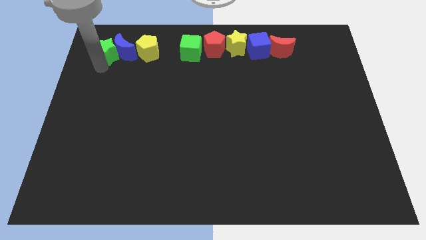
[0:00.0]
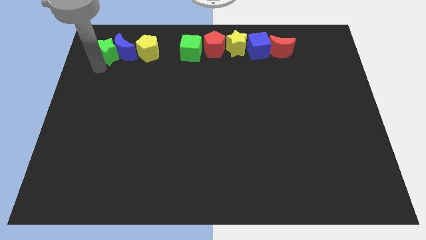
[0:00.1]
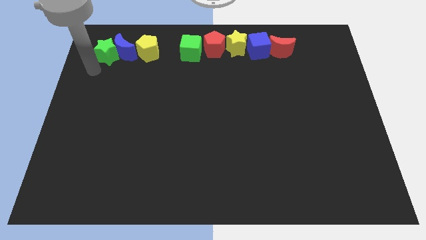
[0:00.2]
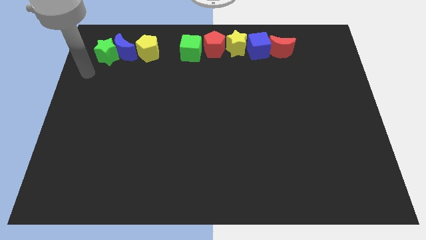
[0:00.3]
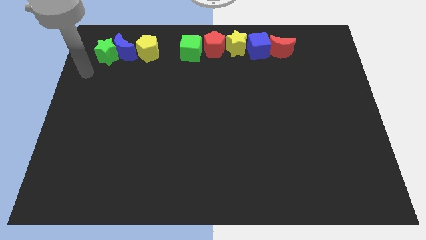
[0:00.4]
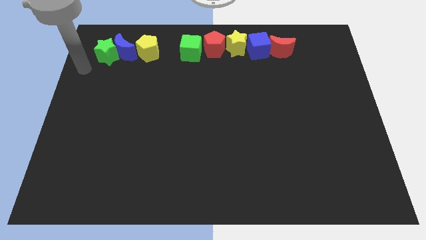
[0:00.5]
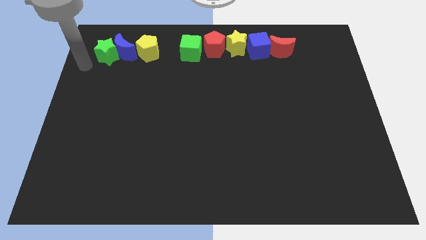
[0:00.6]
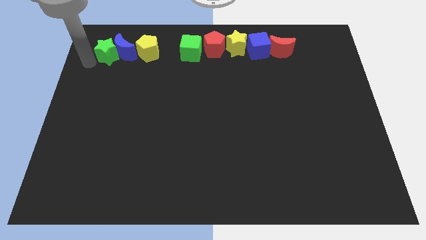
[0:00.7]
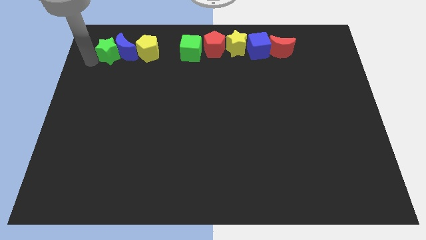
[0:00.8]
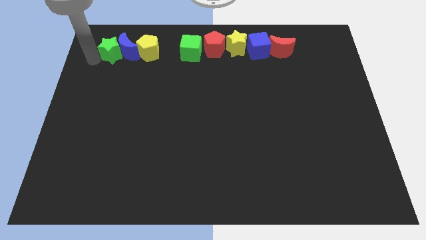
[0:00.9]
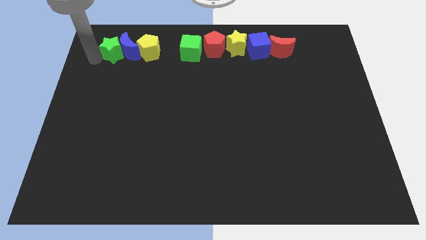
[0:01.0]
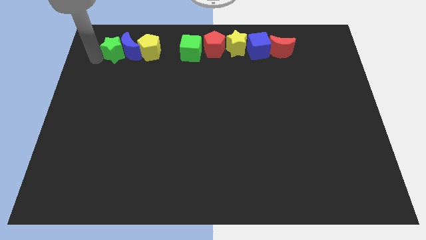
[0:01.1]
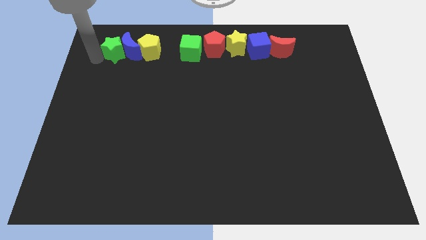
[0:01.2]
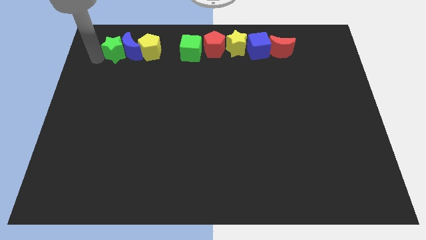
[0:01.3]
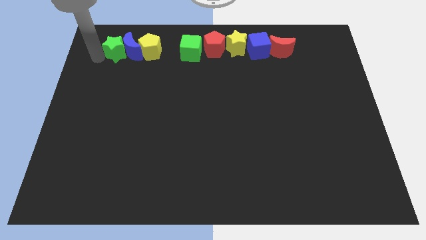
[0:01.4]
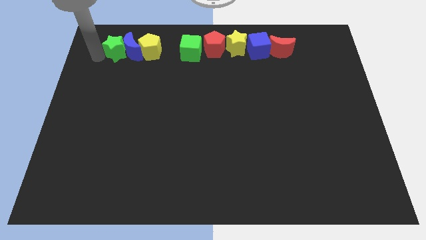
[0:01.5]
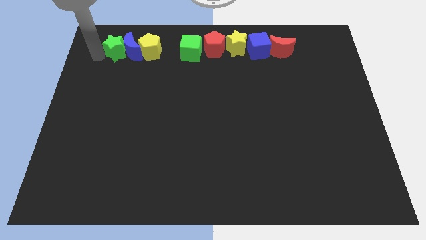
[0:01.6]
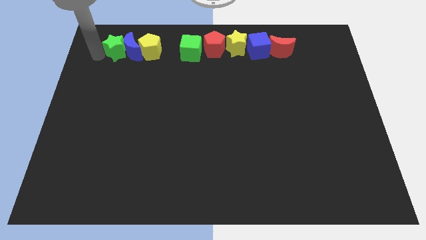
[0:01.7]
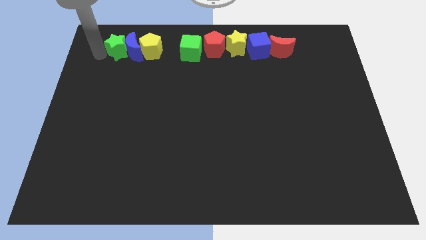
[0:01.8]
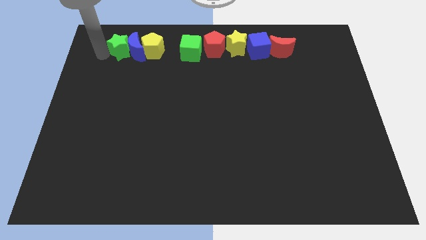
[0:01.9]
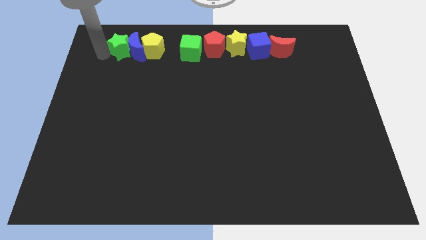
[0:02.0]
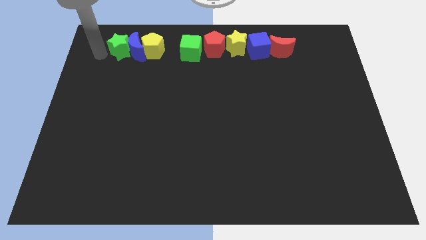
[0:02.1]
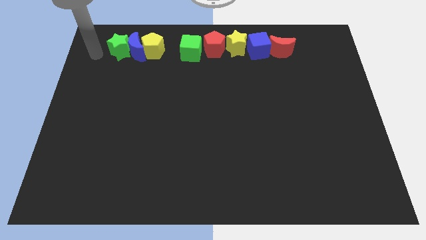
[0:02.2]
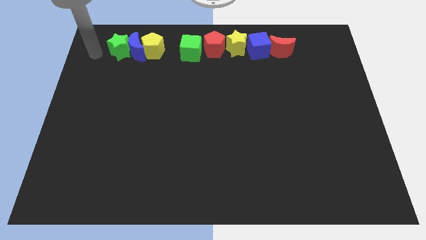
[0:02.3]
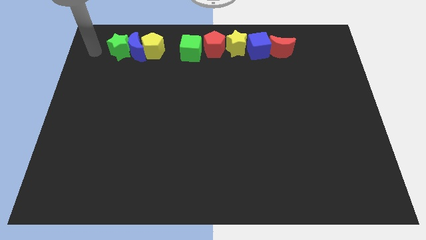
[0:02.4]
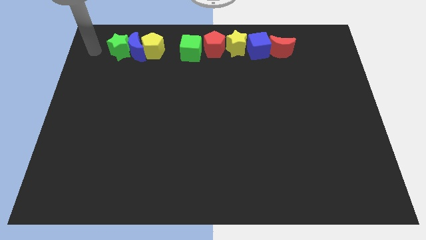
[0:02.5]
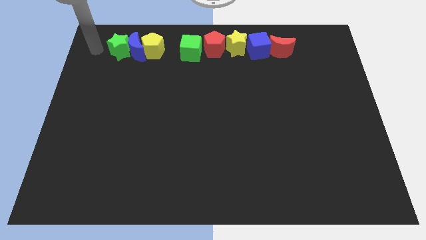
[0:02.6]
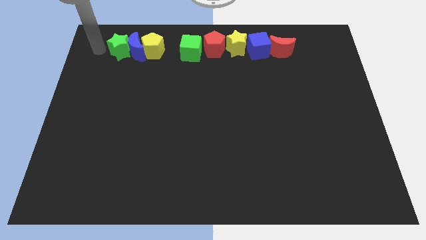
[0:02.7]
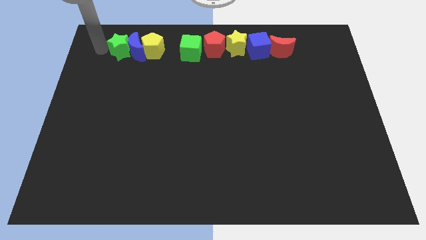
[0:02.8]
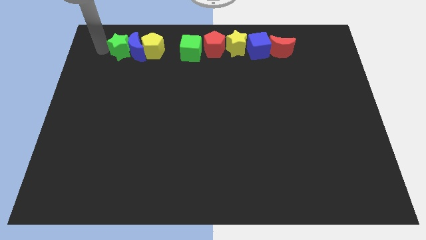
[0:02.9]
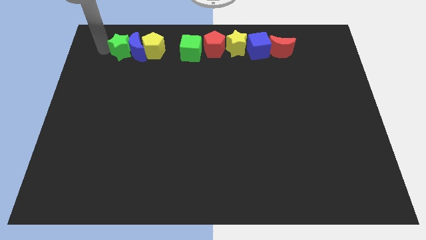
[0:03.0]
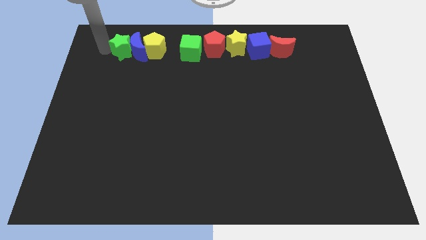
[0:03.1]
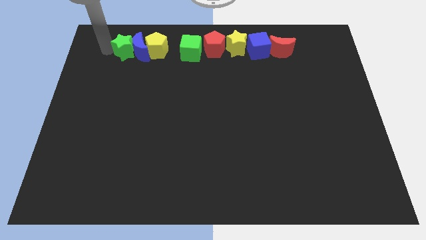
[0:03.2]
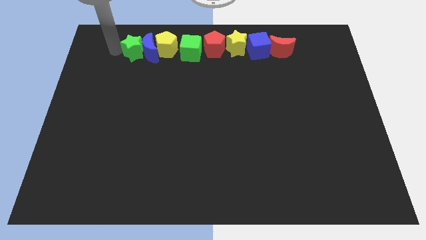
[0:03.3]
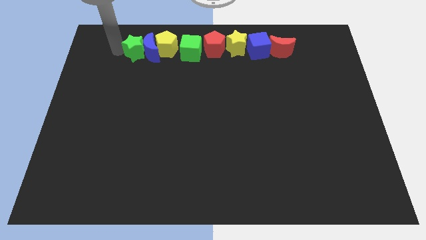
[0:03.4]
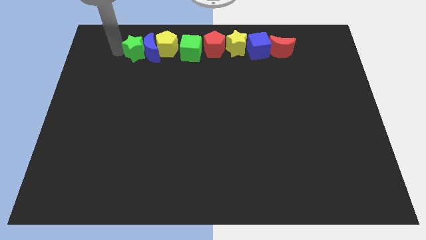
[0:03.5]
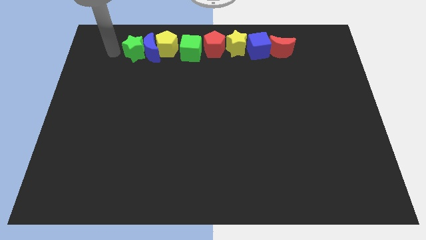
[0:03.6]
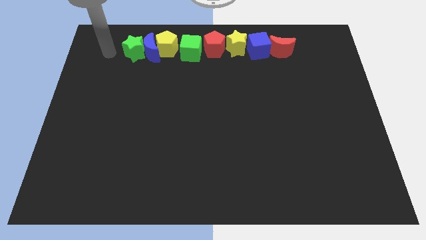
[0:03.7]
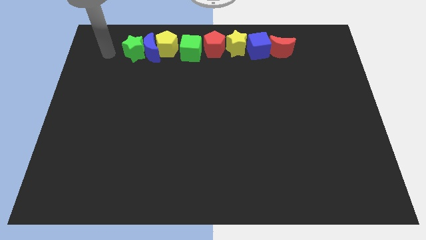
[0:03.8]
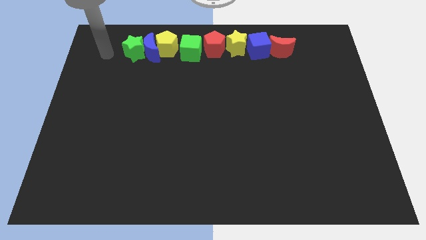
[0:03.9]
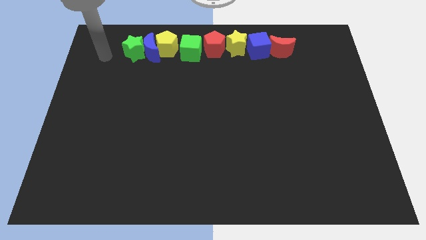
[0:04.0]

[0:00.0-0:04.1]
adjust the blocks to make a horizontally

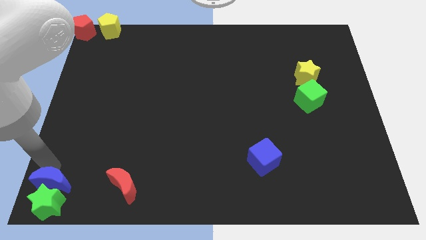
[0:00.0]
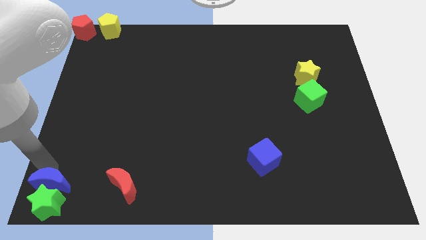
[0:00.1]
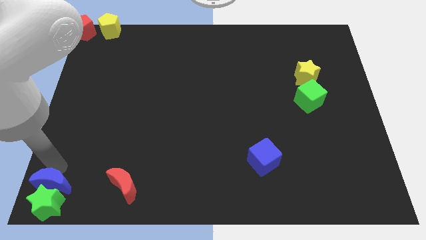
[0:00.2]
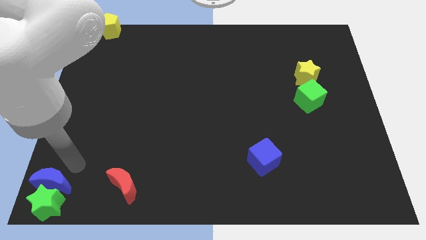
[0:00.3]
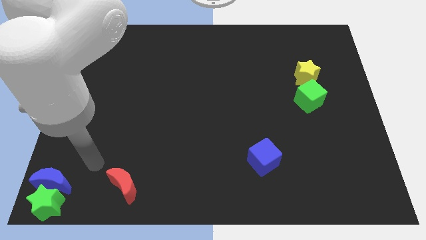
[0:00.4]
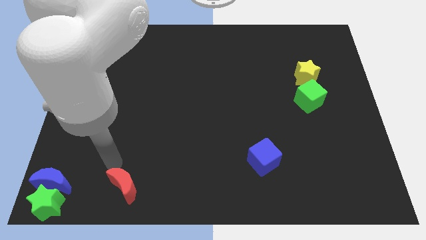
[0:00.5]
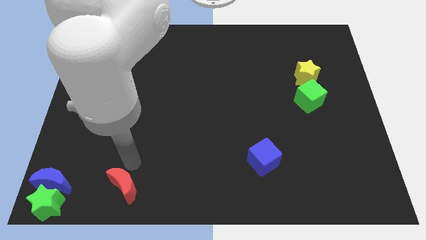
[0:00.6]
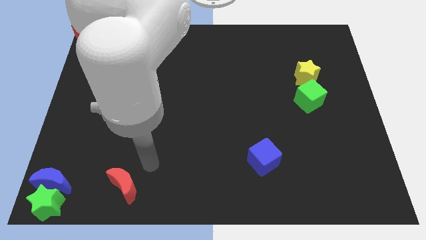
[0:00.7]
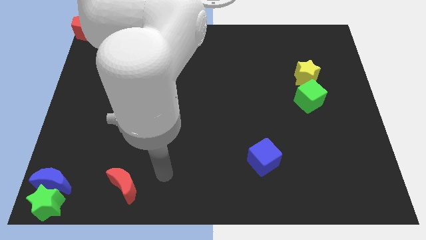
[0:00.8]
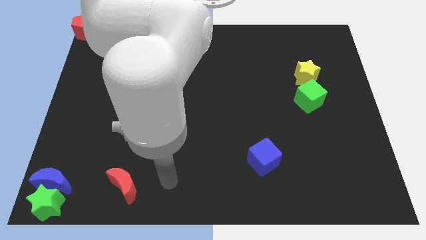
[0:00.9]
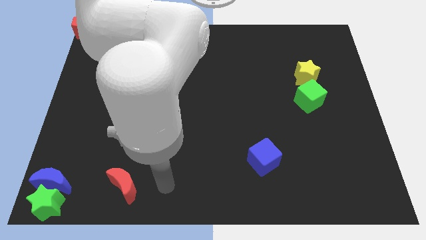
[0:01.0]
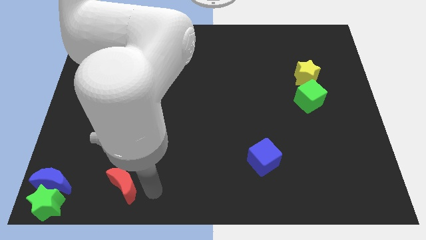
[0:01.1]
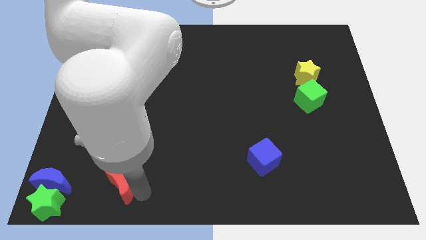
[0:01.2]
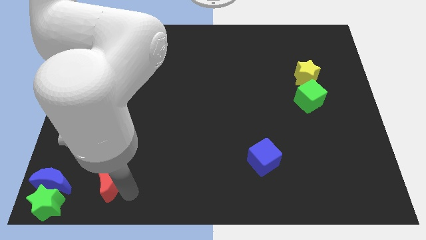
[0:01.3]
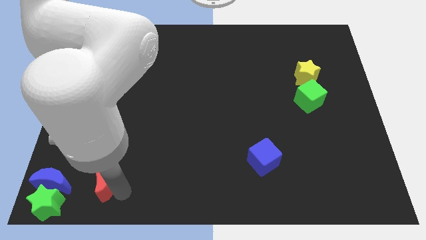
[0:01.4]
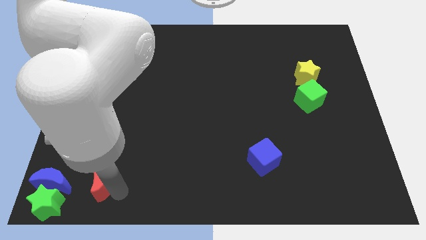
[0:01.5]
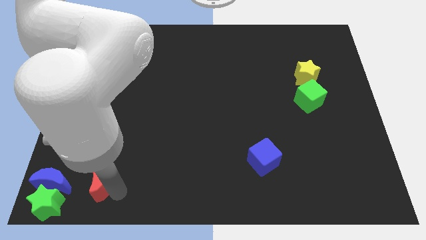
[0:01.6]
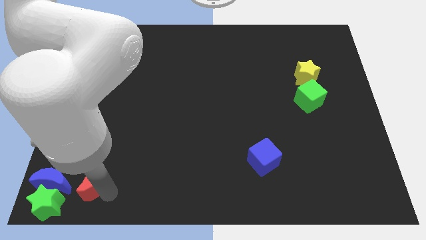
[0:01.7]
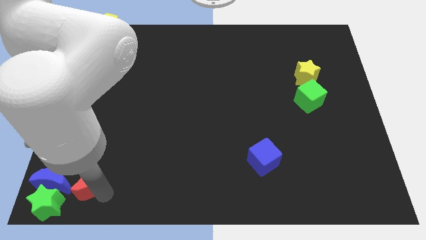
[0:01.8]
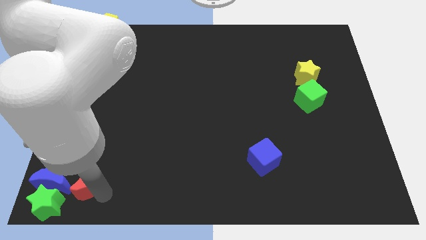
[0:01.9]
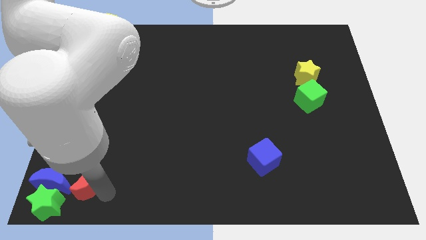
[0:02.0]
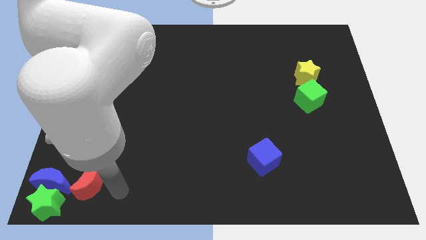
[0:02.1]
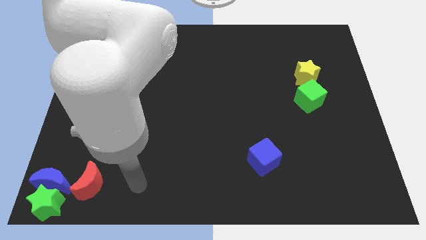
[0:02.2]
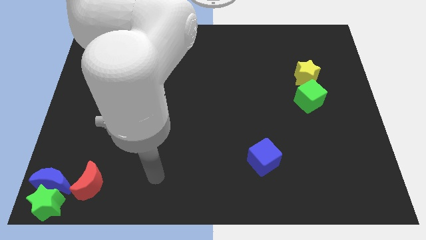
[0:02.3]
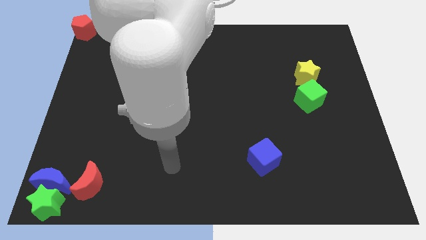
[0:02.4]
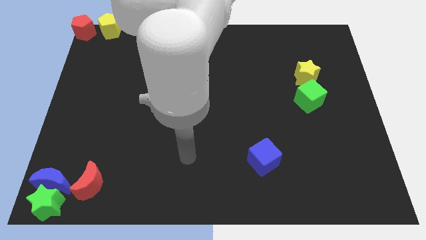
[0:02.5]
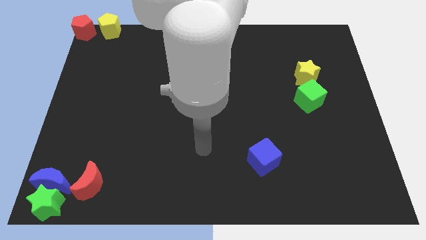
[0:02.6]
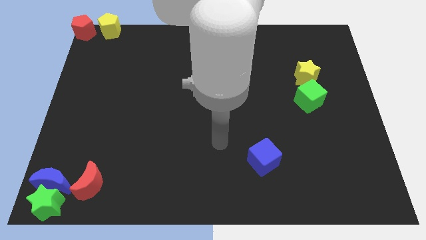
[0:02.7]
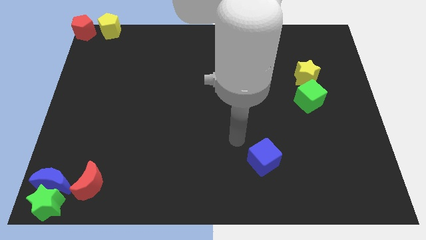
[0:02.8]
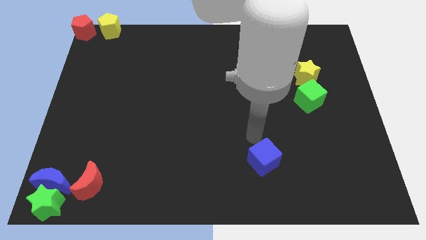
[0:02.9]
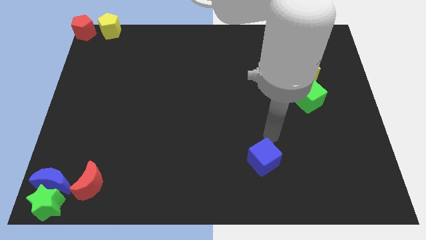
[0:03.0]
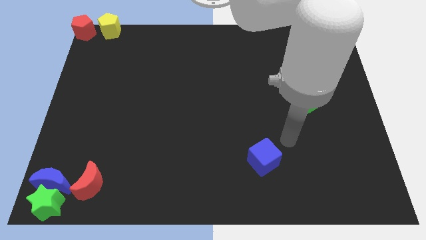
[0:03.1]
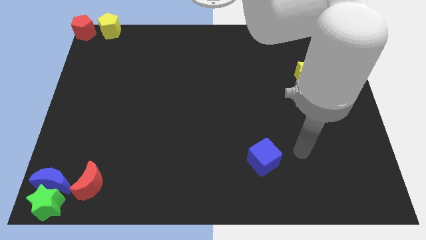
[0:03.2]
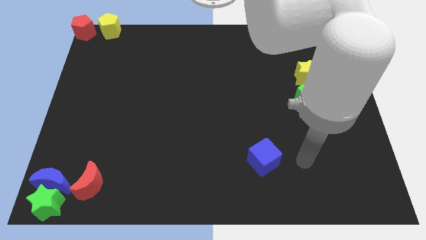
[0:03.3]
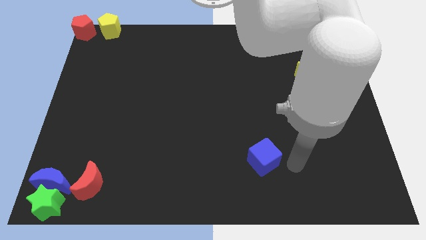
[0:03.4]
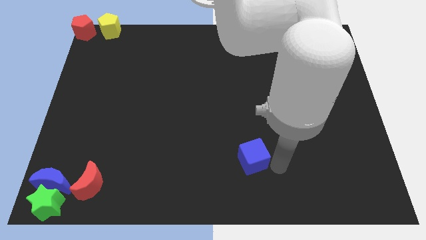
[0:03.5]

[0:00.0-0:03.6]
move the red moon close to the blue moon

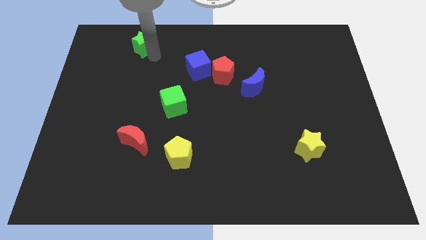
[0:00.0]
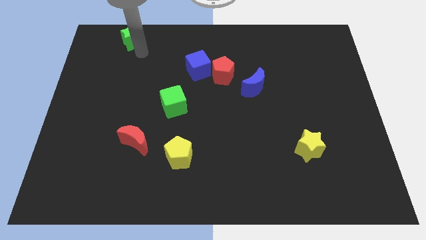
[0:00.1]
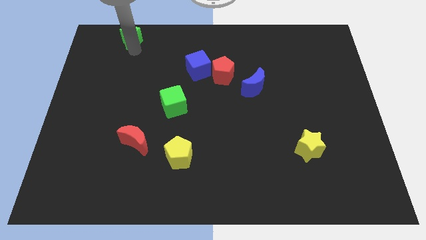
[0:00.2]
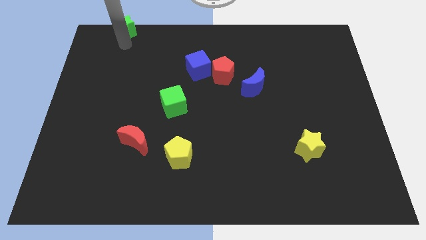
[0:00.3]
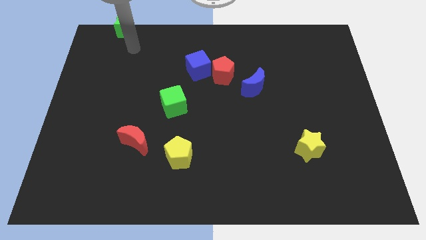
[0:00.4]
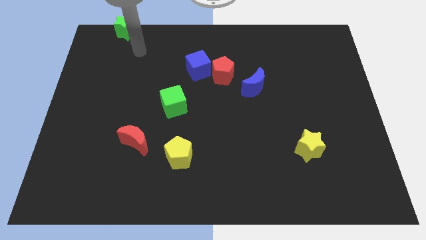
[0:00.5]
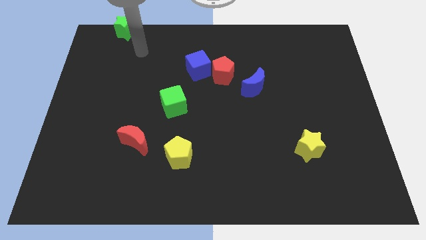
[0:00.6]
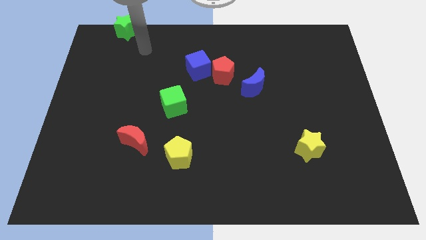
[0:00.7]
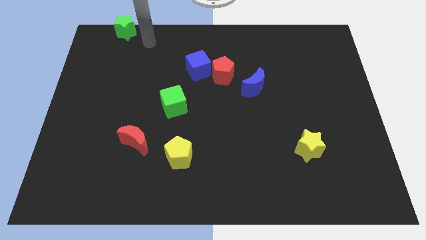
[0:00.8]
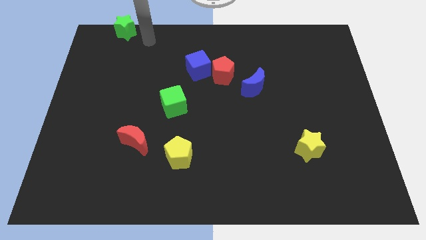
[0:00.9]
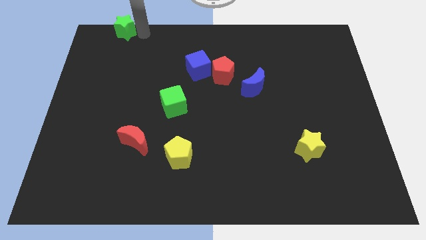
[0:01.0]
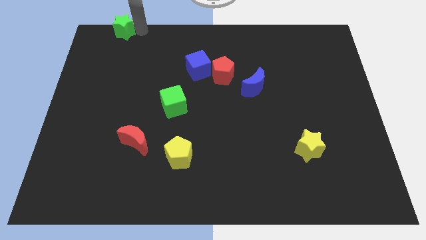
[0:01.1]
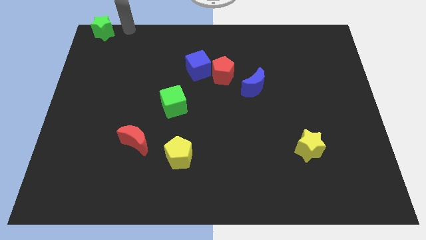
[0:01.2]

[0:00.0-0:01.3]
move the green star to the top side of the table
